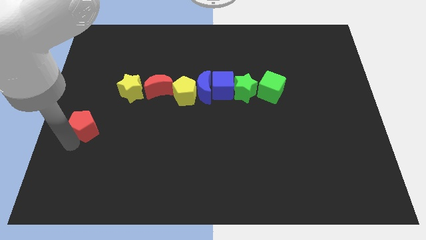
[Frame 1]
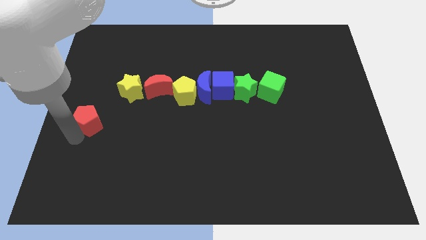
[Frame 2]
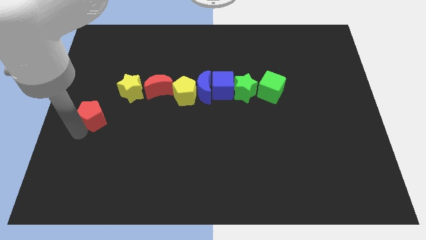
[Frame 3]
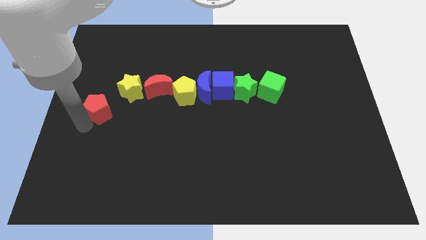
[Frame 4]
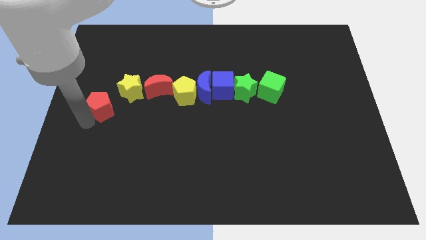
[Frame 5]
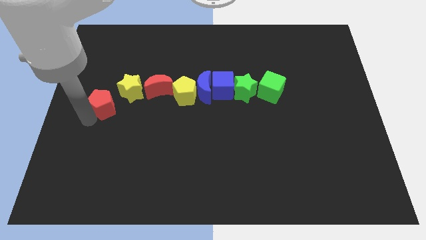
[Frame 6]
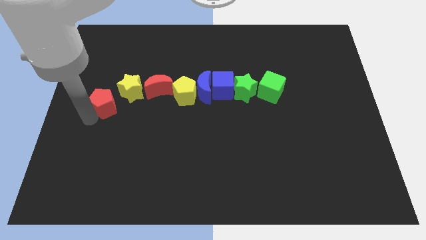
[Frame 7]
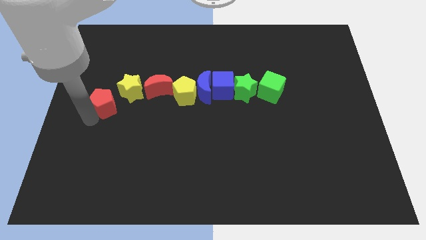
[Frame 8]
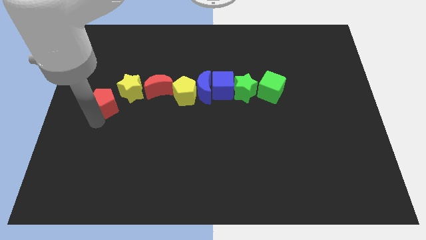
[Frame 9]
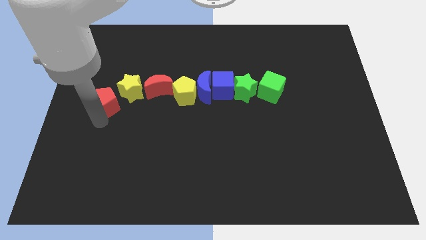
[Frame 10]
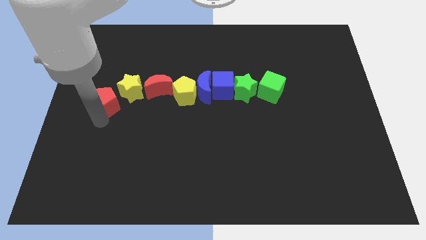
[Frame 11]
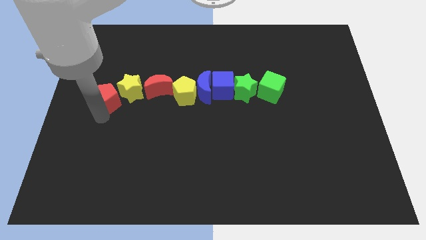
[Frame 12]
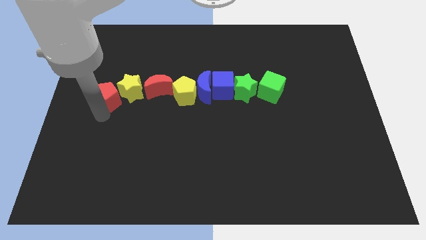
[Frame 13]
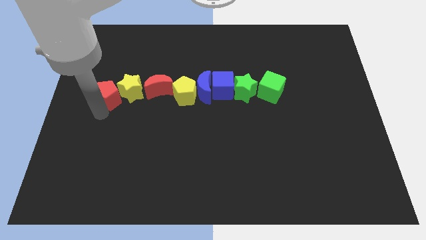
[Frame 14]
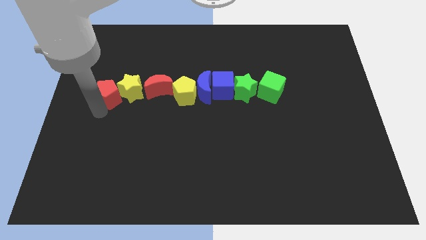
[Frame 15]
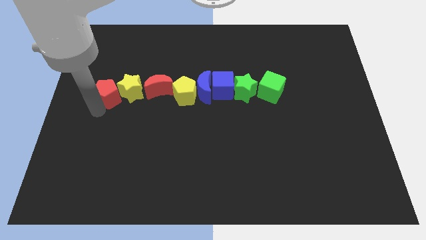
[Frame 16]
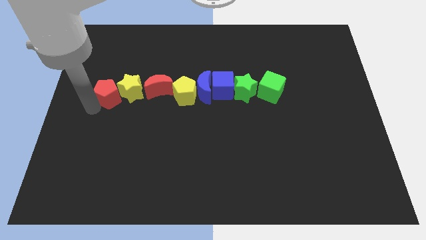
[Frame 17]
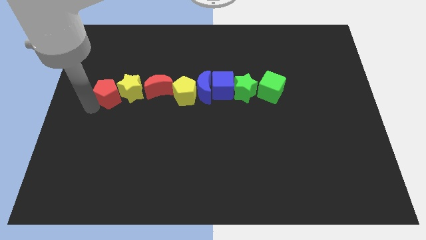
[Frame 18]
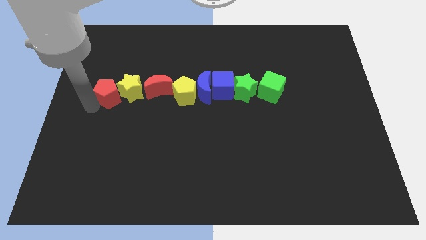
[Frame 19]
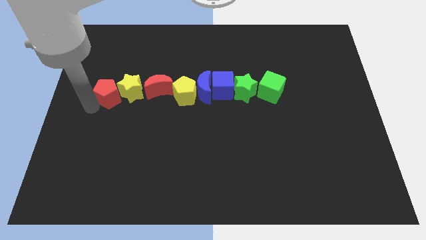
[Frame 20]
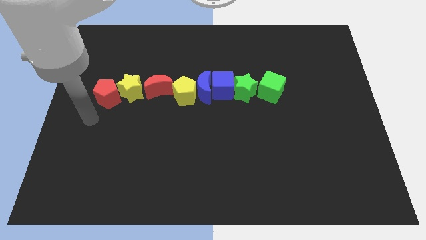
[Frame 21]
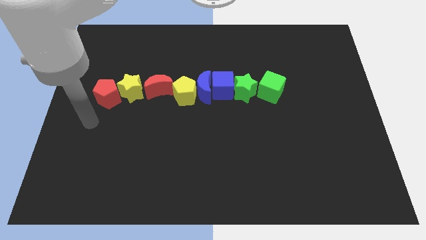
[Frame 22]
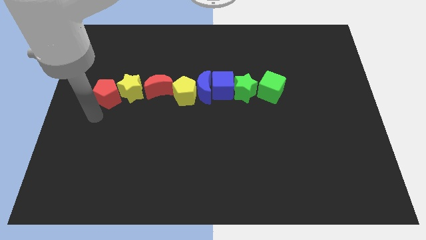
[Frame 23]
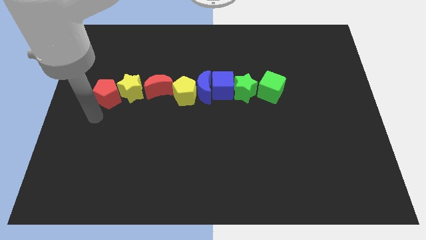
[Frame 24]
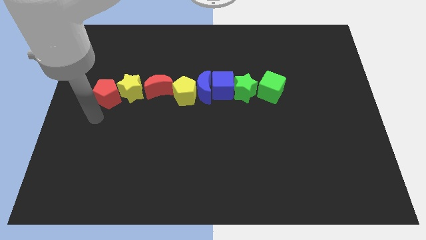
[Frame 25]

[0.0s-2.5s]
push the red pentagon to the left of the yellow star to form a horizontal line

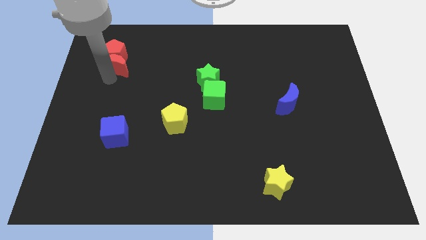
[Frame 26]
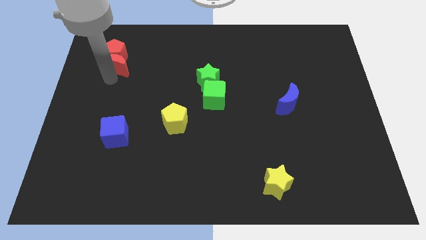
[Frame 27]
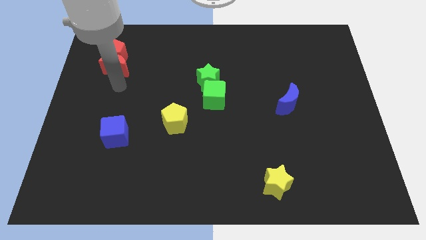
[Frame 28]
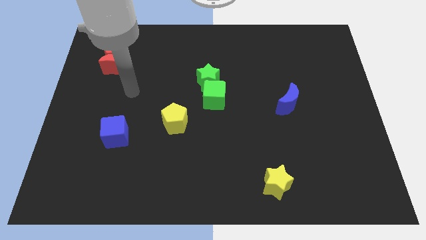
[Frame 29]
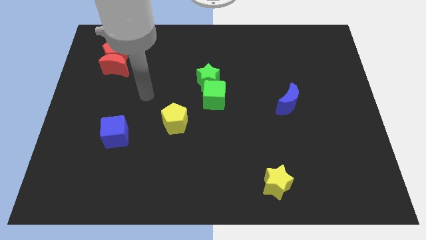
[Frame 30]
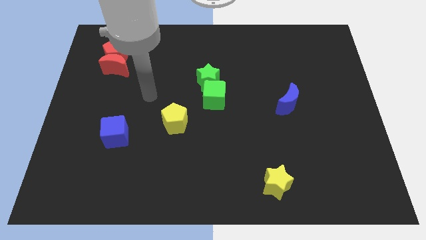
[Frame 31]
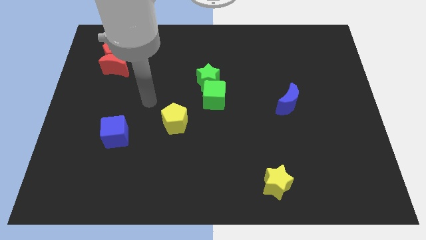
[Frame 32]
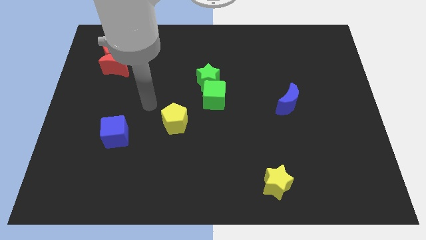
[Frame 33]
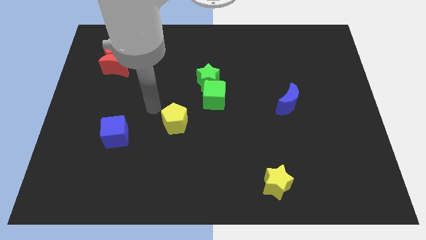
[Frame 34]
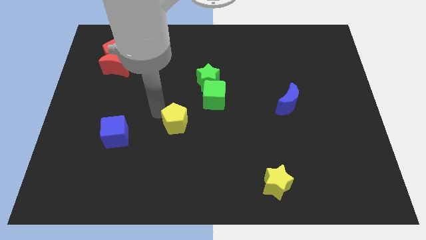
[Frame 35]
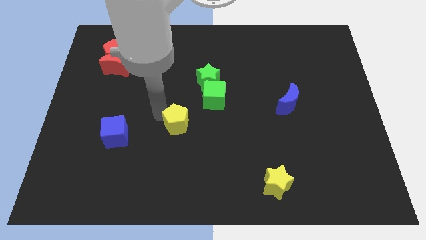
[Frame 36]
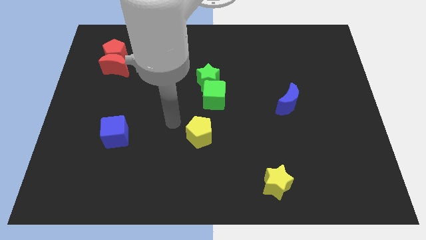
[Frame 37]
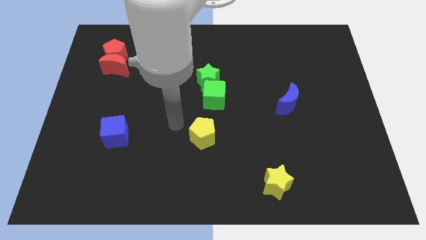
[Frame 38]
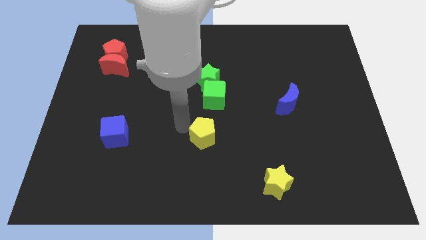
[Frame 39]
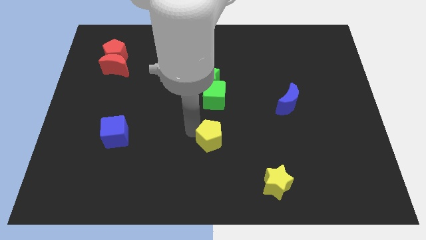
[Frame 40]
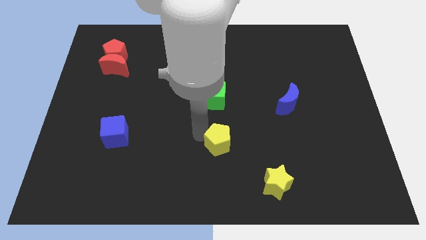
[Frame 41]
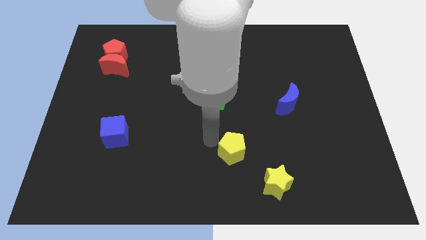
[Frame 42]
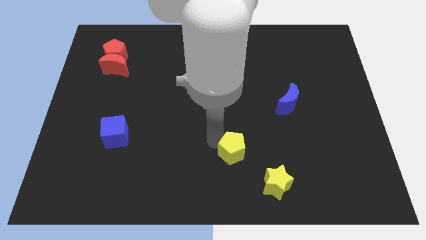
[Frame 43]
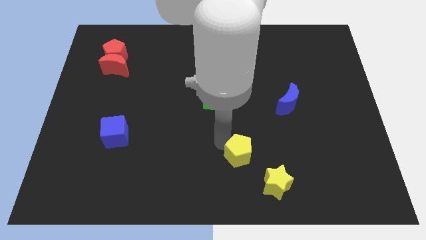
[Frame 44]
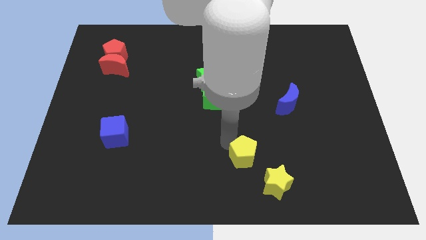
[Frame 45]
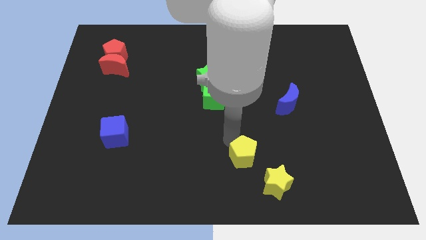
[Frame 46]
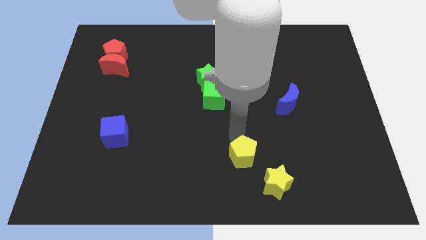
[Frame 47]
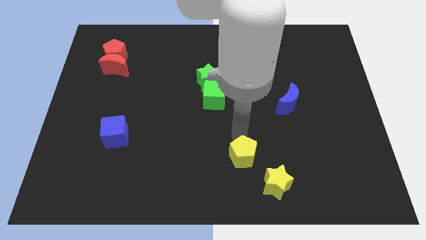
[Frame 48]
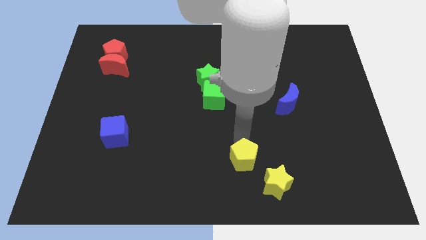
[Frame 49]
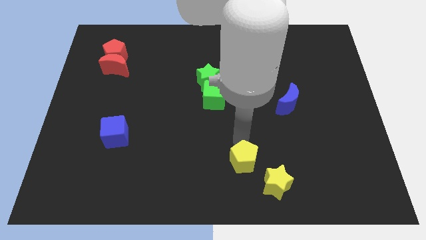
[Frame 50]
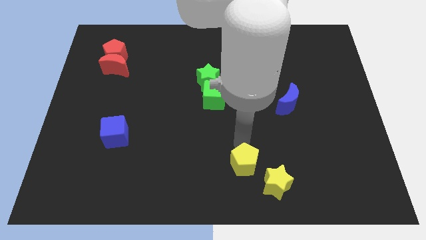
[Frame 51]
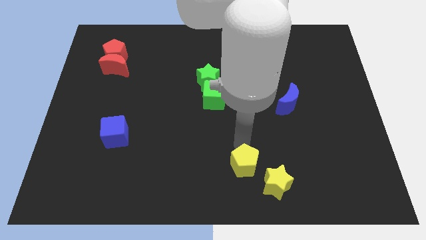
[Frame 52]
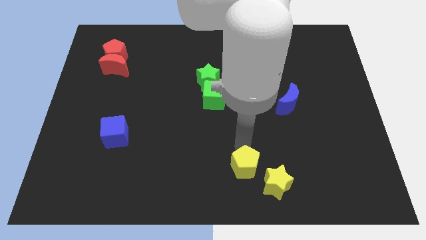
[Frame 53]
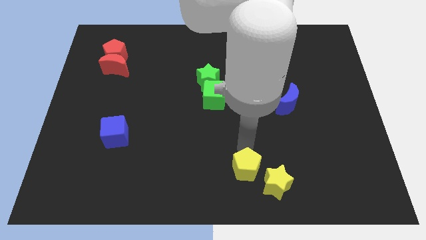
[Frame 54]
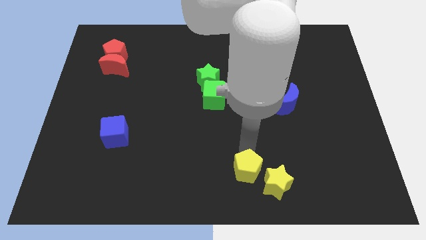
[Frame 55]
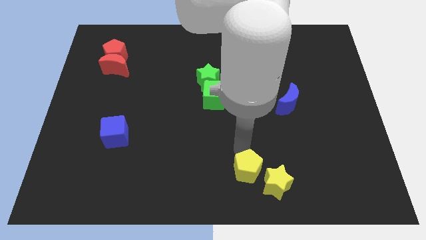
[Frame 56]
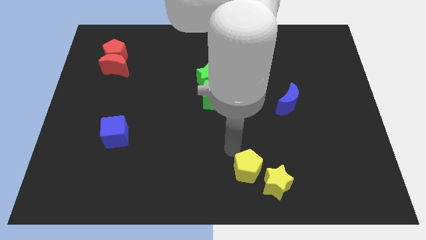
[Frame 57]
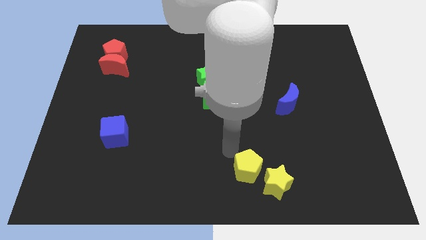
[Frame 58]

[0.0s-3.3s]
place yellow pentagon to the top left of yellow star

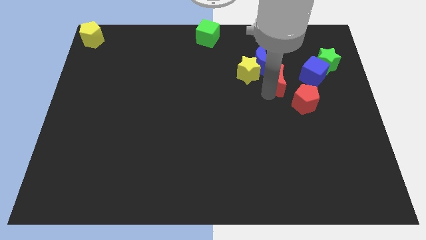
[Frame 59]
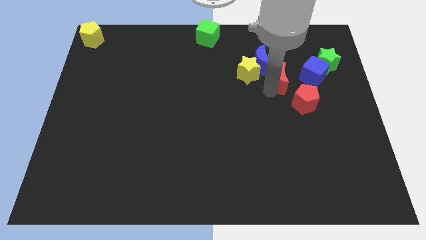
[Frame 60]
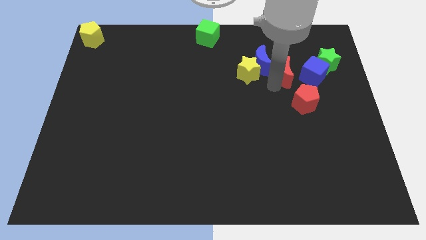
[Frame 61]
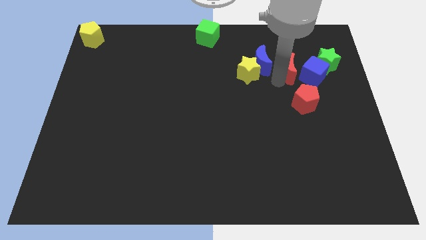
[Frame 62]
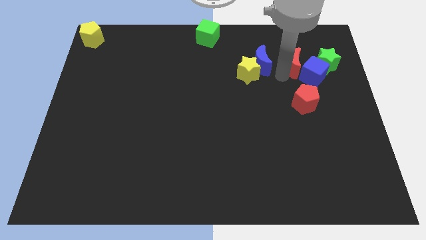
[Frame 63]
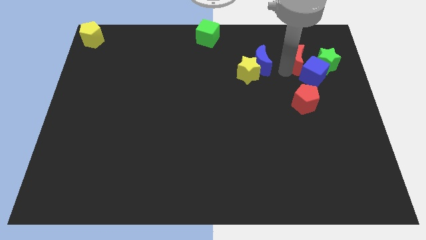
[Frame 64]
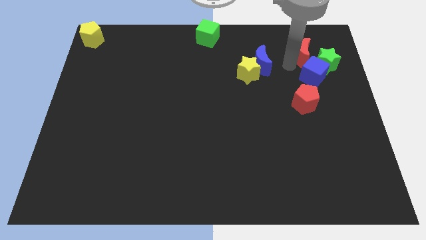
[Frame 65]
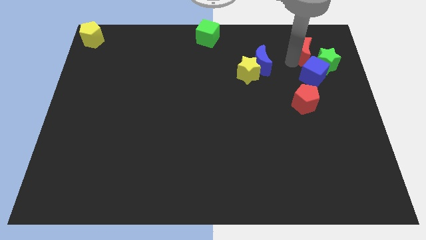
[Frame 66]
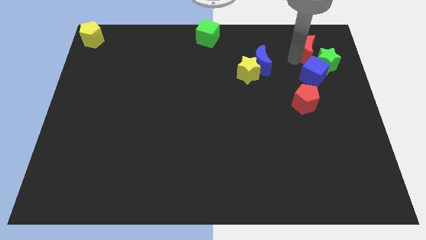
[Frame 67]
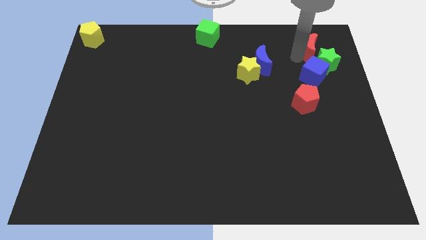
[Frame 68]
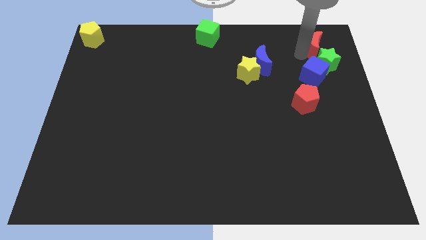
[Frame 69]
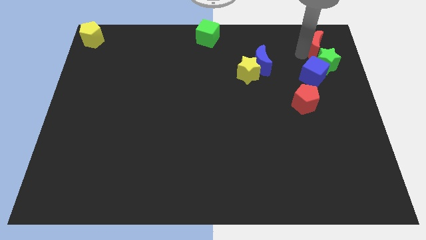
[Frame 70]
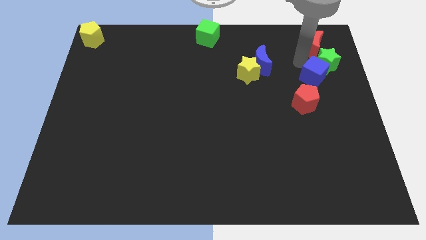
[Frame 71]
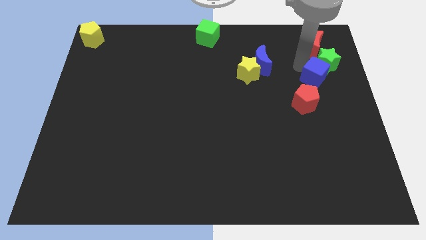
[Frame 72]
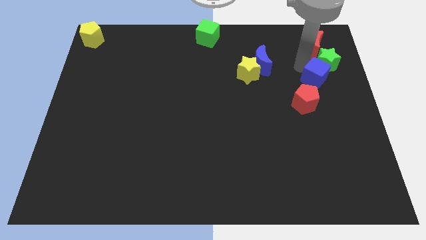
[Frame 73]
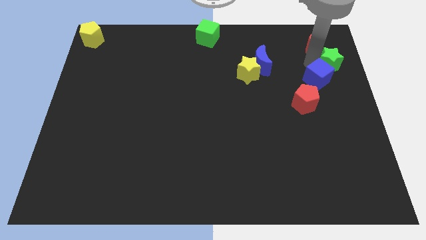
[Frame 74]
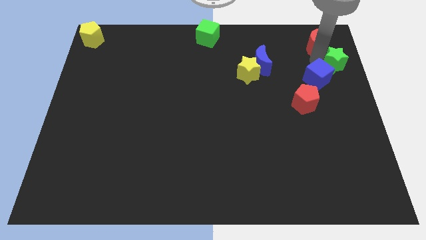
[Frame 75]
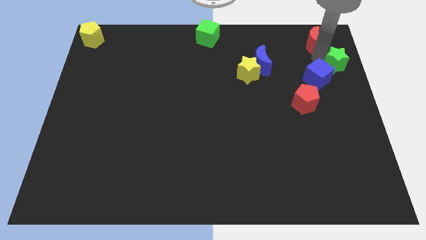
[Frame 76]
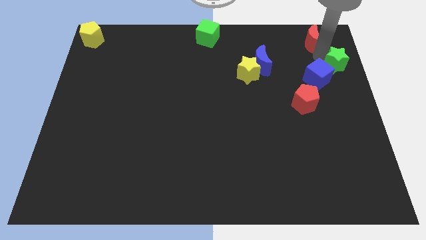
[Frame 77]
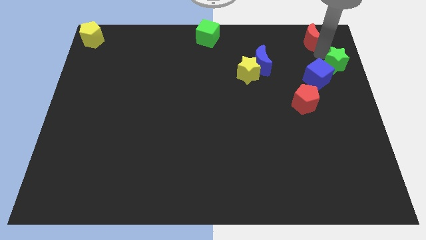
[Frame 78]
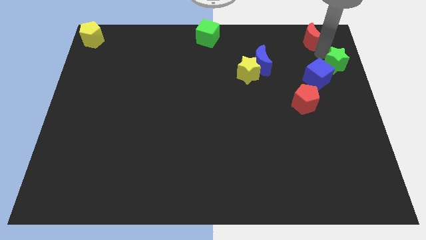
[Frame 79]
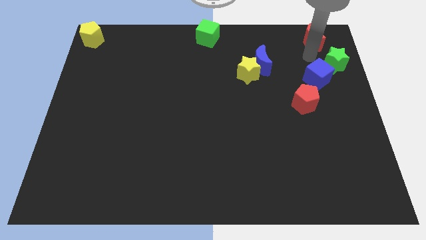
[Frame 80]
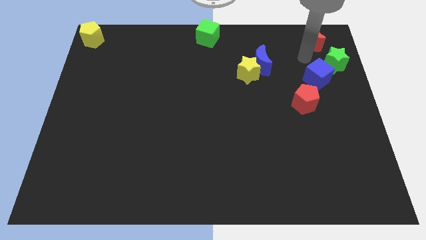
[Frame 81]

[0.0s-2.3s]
place the red moon left to the green star

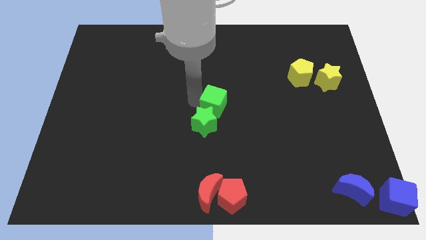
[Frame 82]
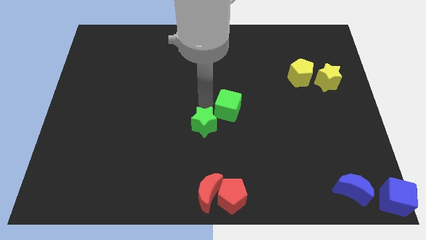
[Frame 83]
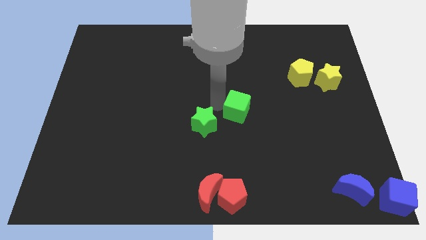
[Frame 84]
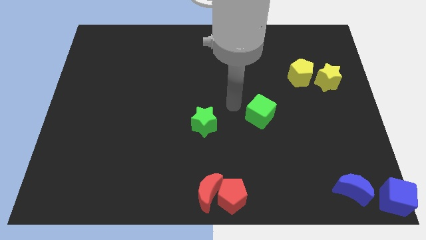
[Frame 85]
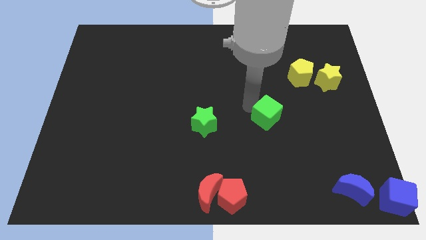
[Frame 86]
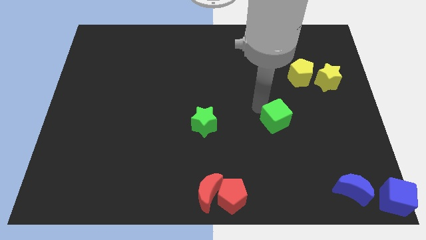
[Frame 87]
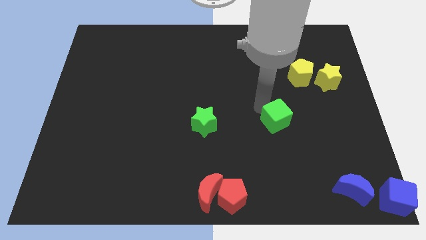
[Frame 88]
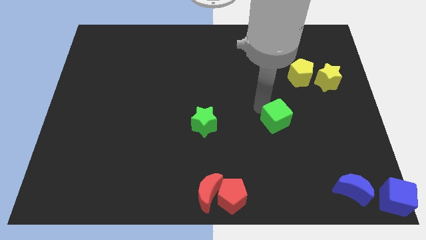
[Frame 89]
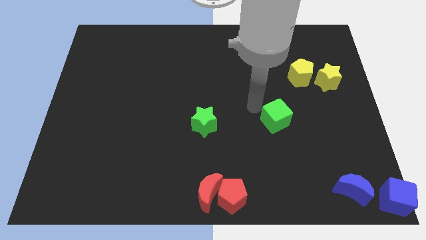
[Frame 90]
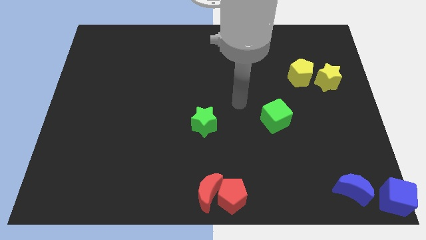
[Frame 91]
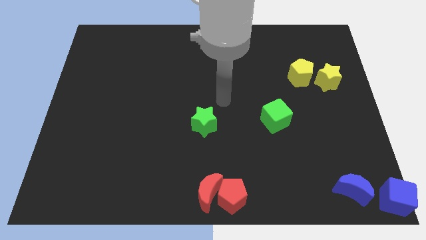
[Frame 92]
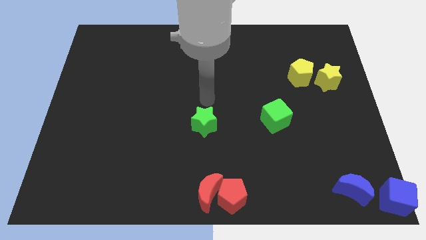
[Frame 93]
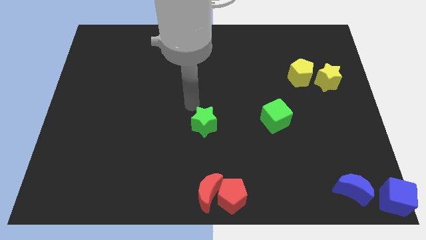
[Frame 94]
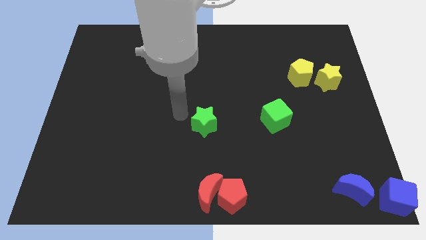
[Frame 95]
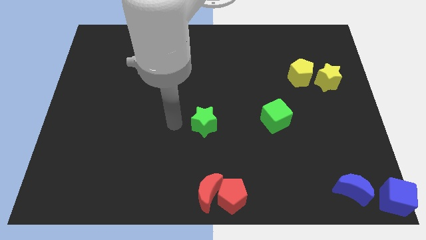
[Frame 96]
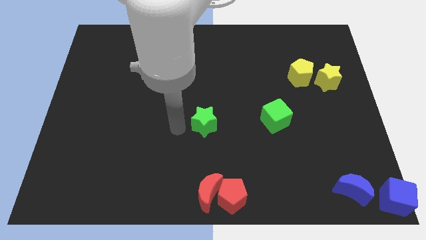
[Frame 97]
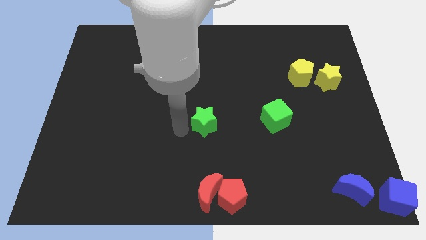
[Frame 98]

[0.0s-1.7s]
separate the green cube from the green star
